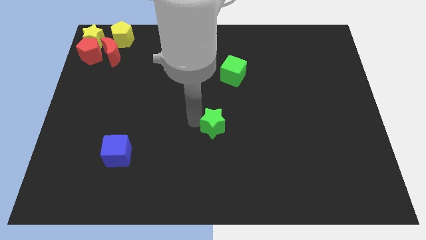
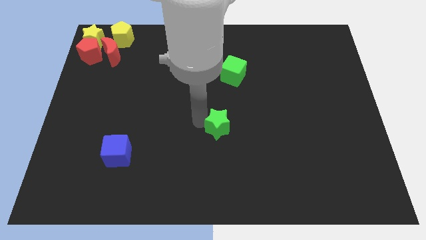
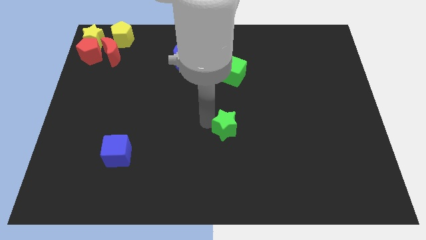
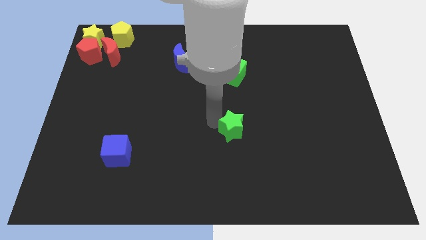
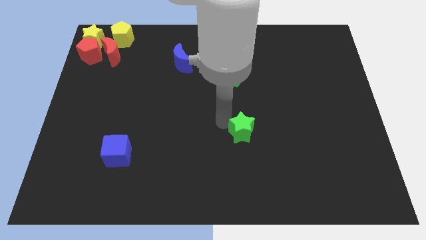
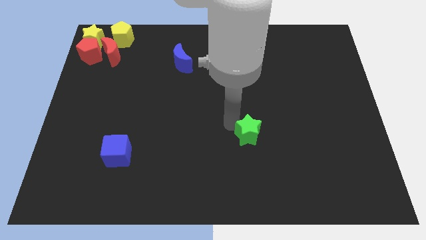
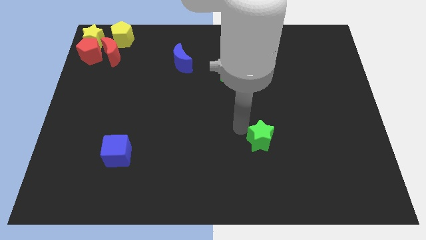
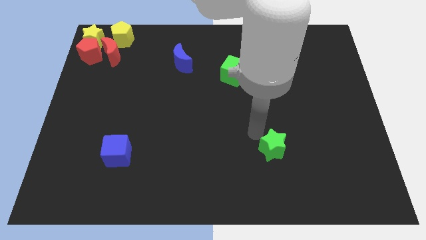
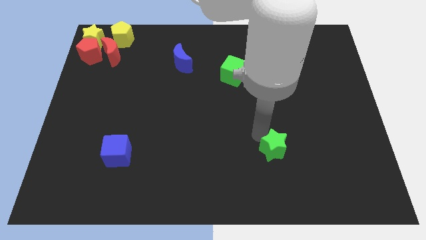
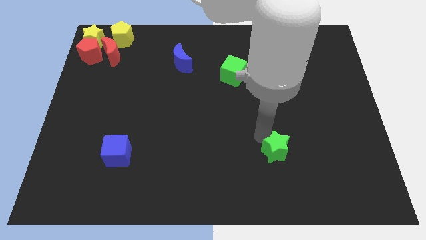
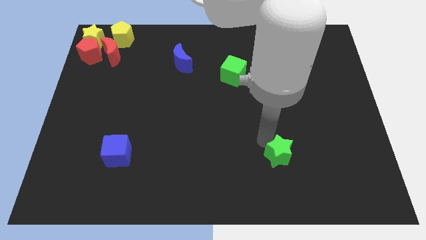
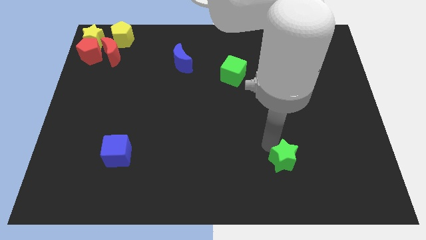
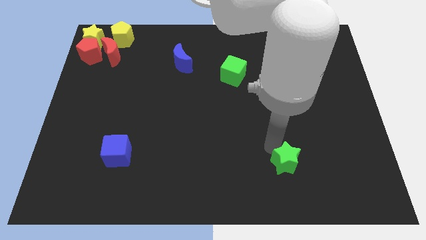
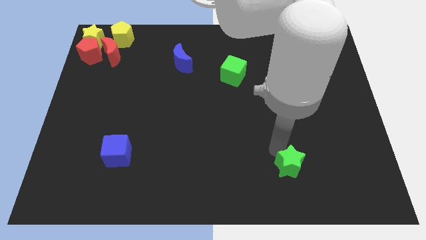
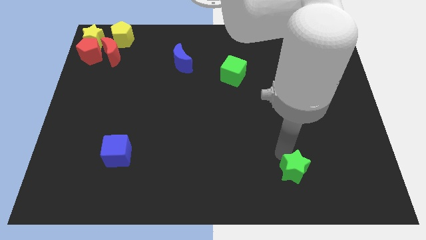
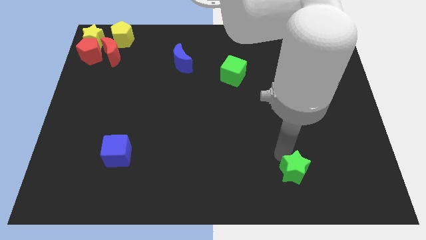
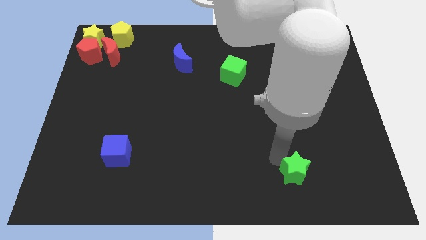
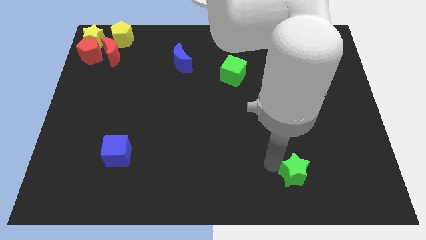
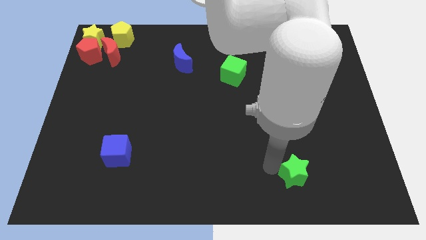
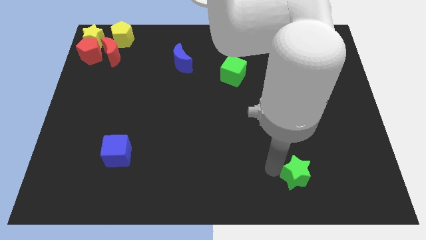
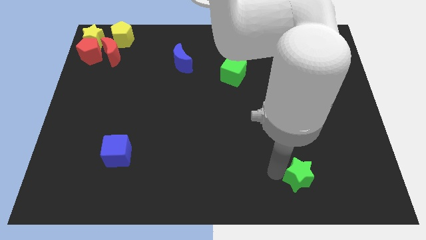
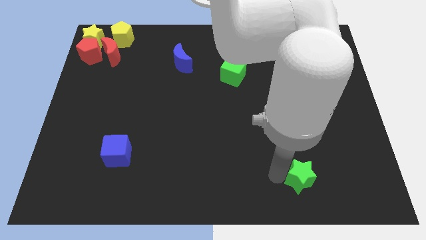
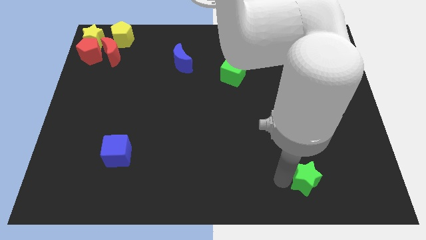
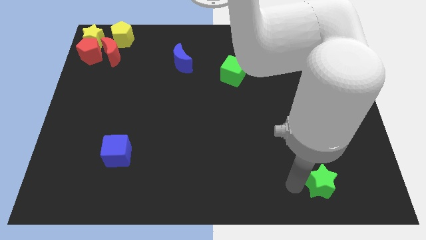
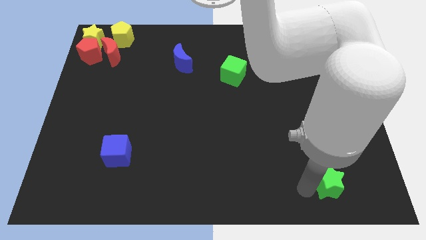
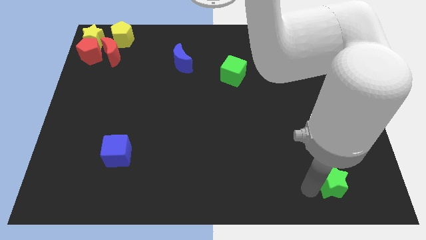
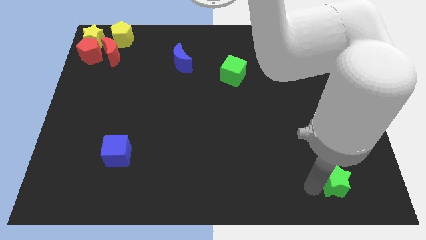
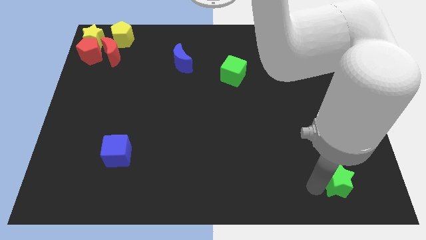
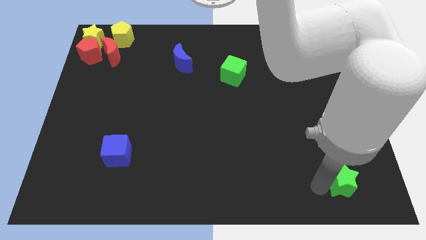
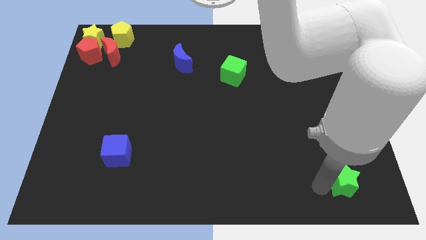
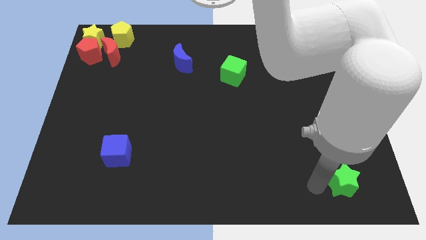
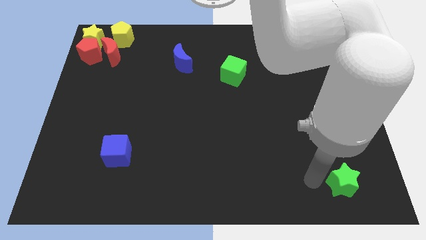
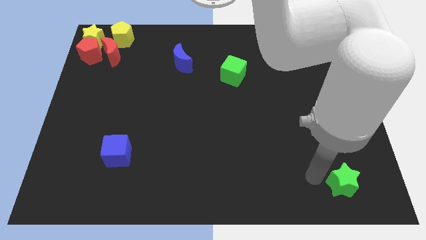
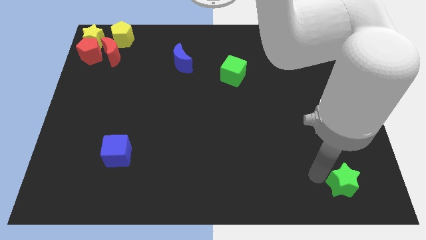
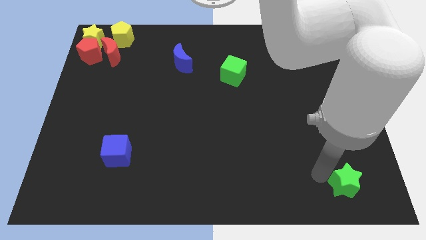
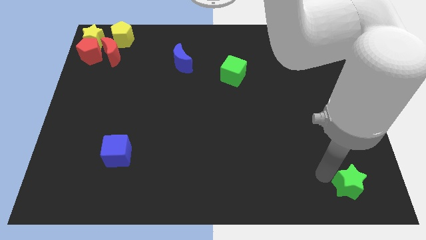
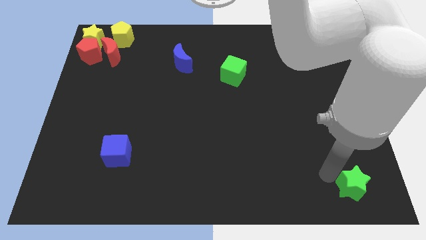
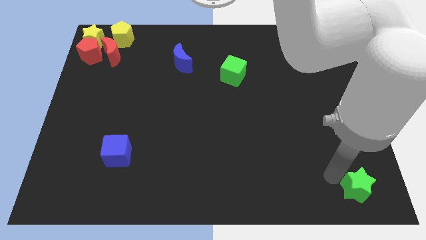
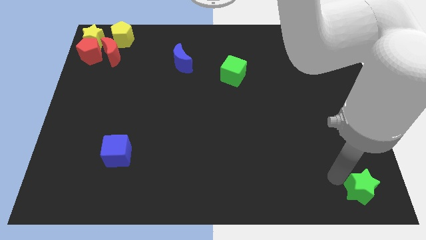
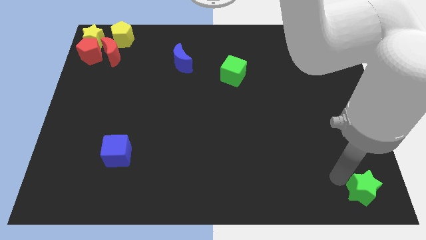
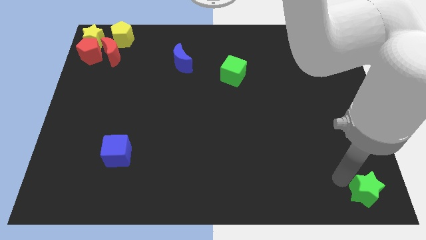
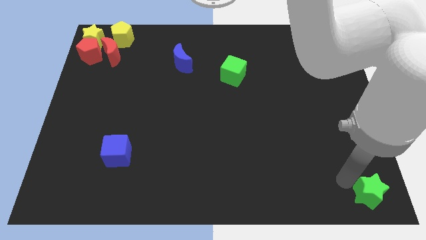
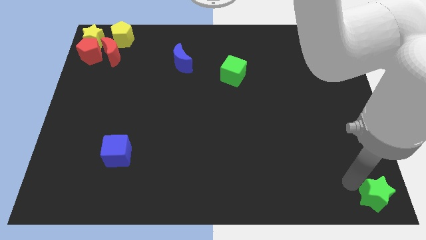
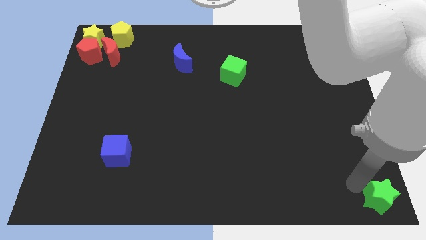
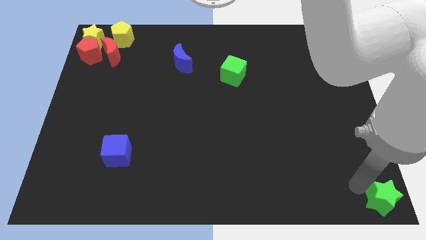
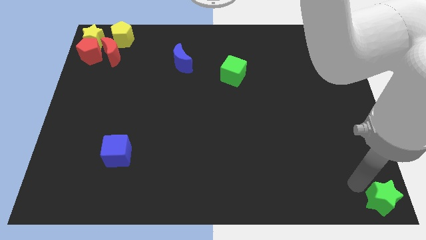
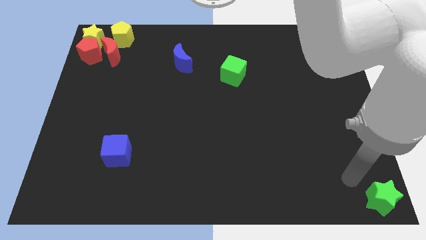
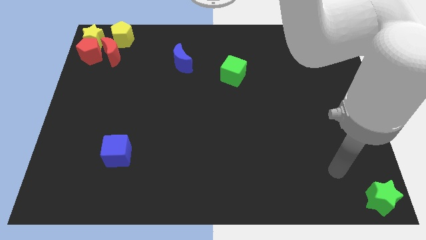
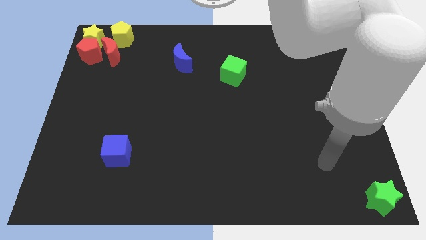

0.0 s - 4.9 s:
move the green star to the bottom right corner

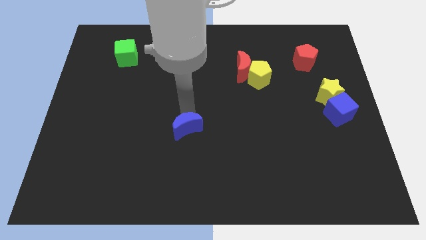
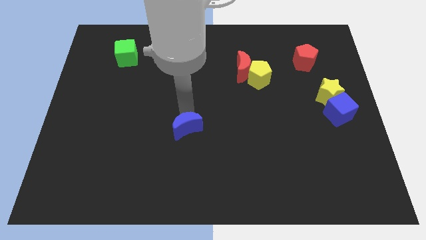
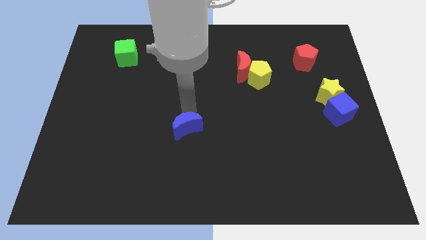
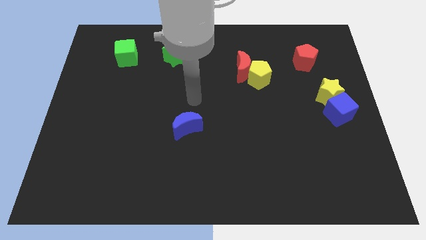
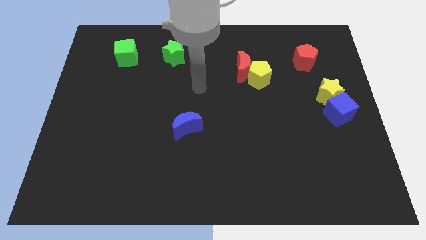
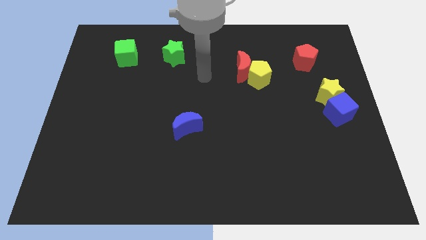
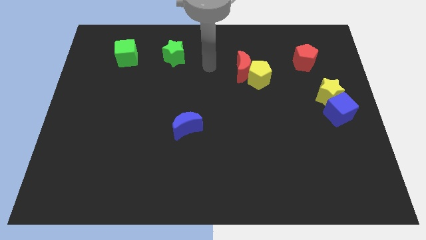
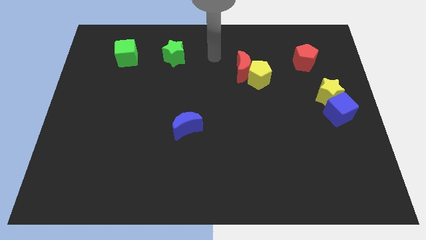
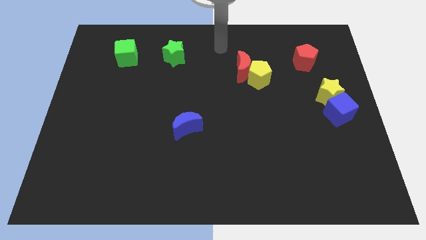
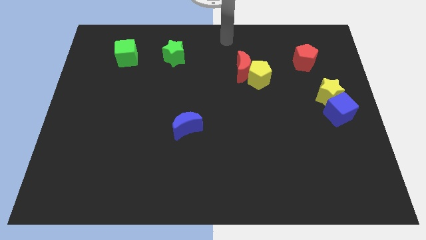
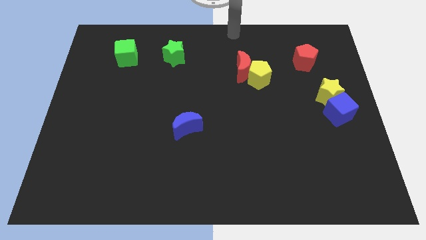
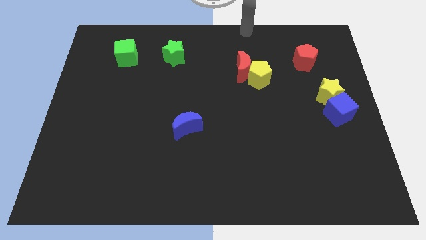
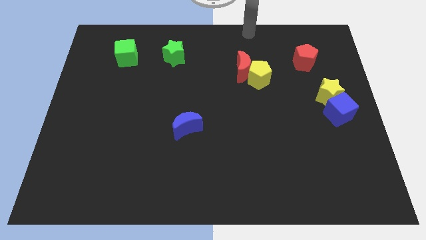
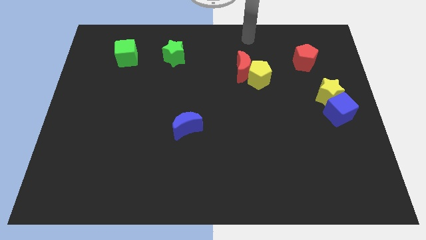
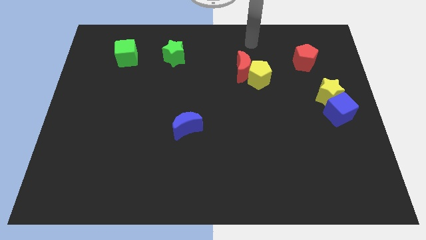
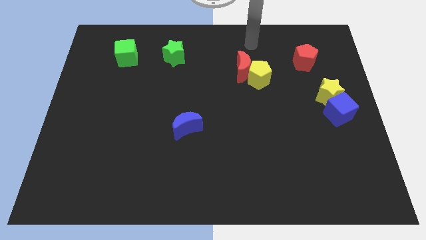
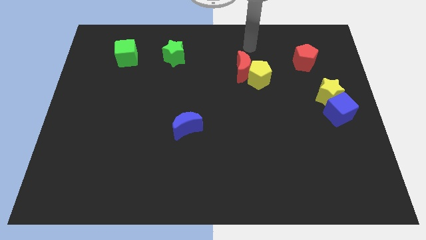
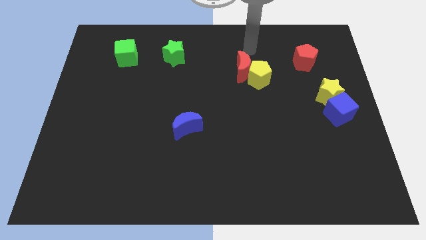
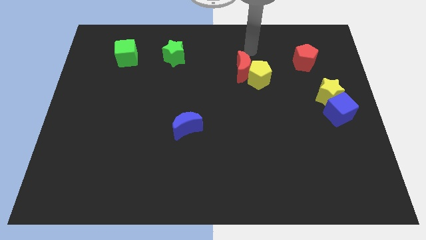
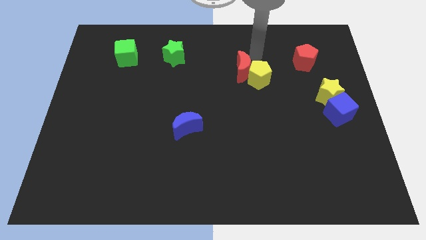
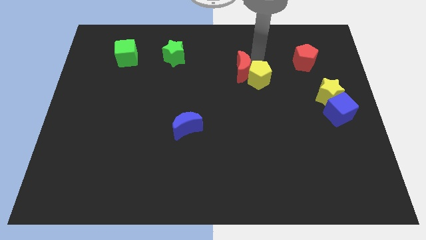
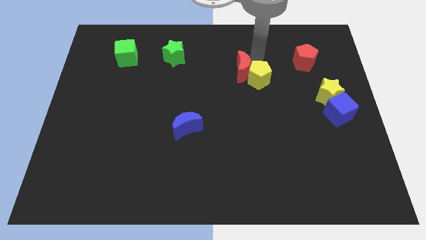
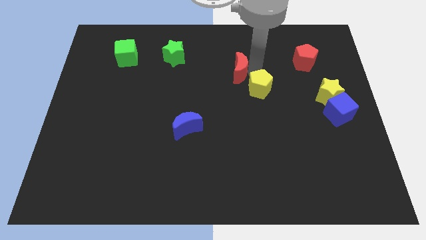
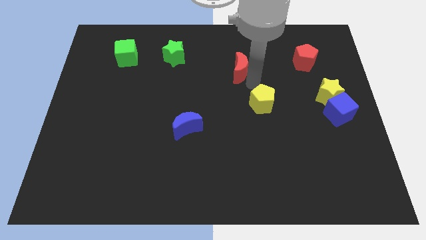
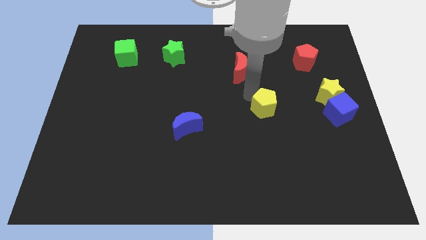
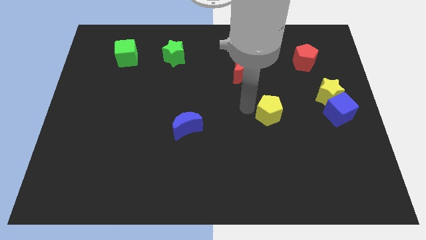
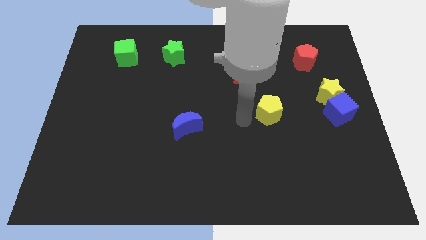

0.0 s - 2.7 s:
place the yellow pentagon left to the yellow star

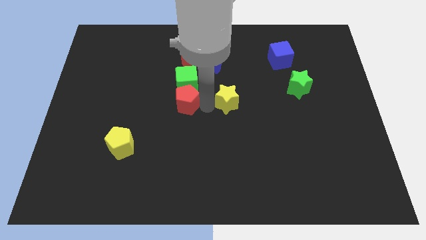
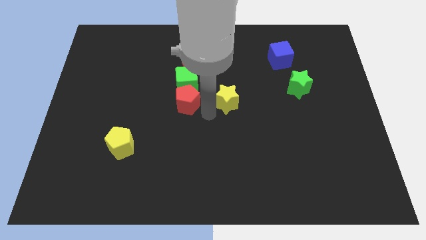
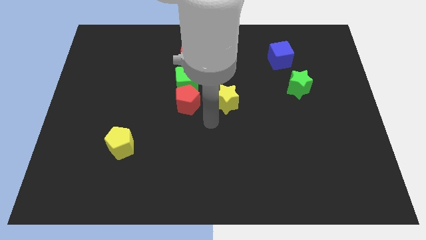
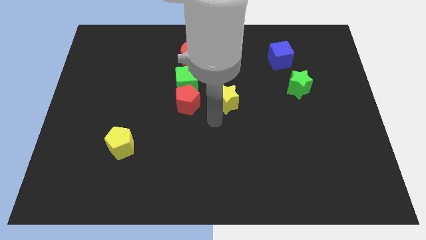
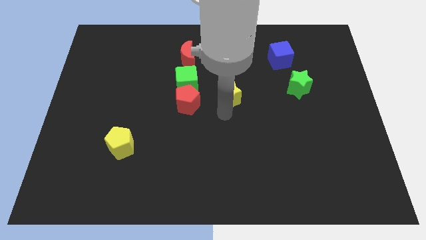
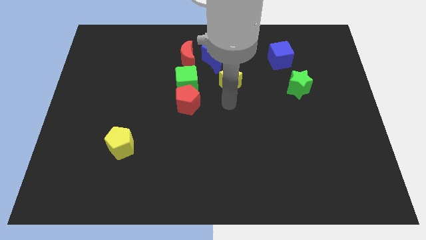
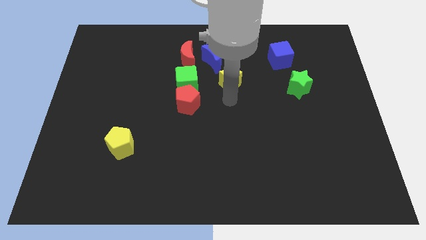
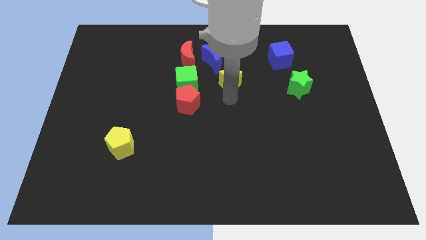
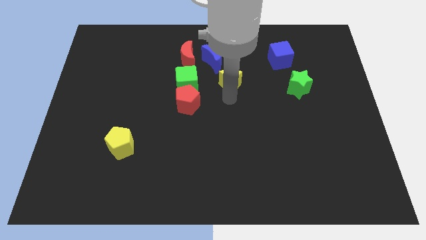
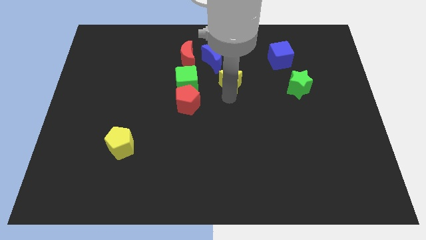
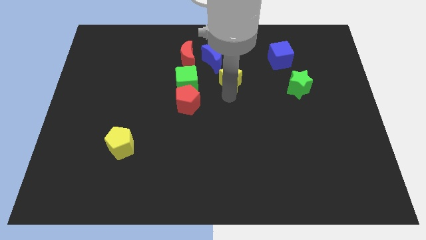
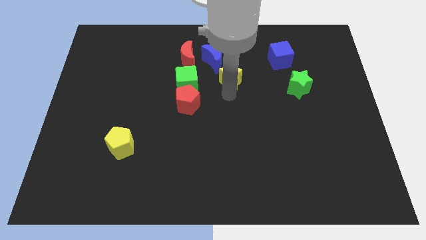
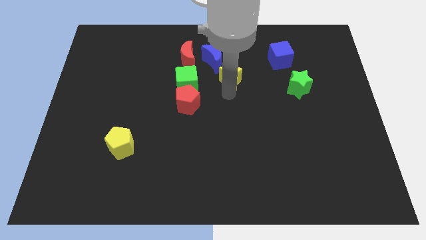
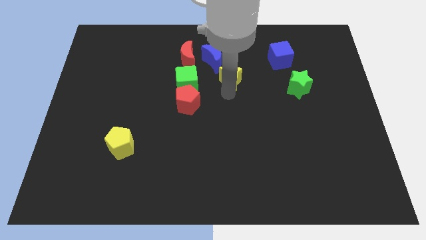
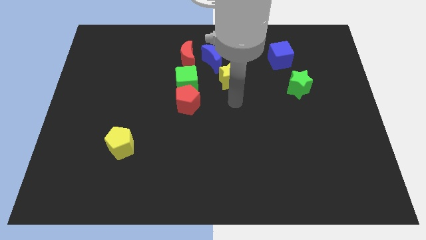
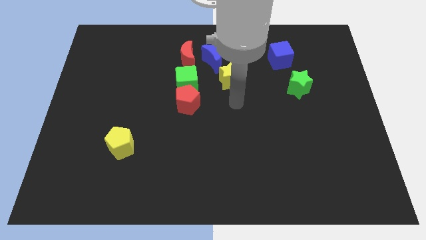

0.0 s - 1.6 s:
push the yellow star under the blue crescent
